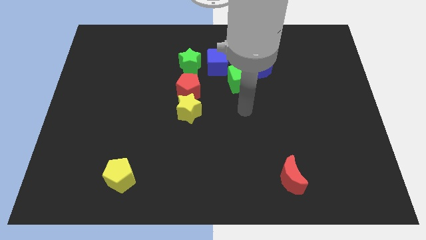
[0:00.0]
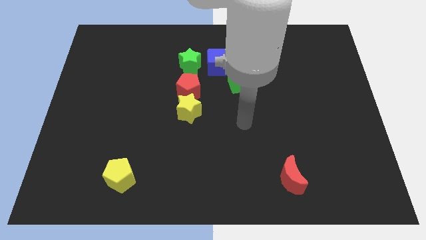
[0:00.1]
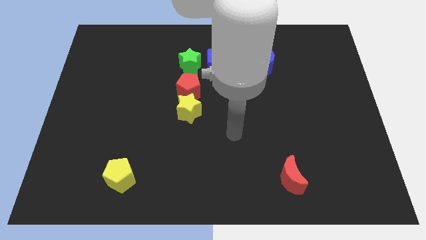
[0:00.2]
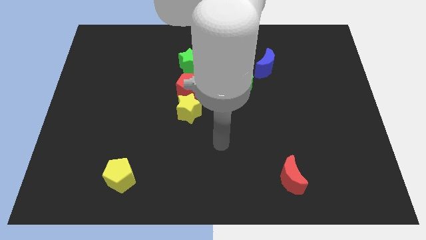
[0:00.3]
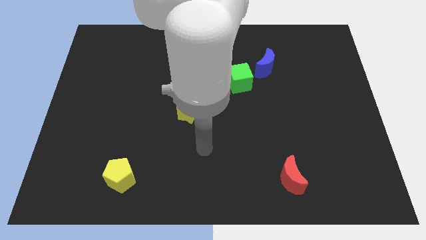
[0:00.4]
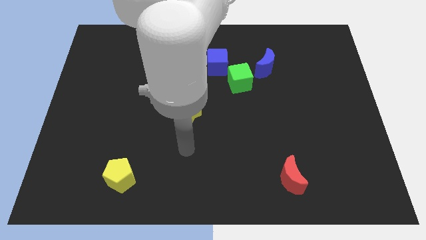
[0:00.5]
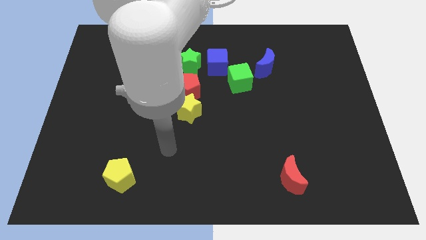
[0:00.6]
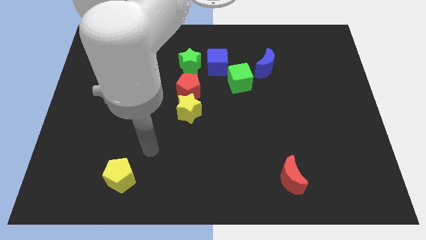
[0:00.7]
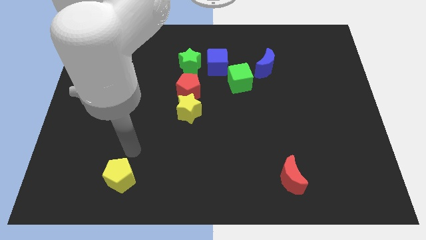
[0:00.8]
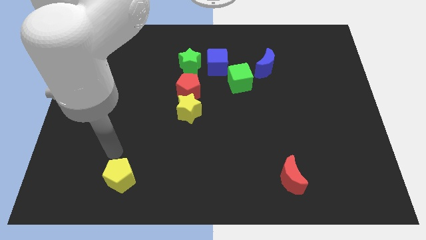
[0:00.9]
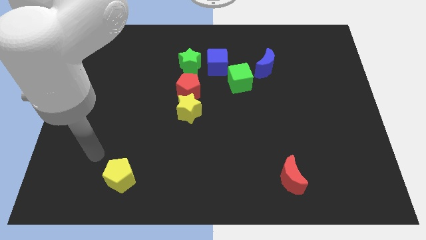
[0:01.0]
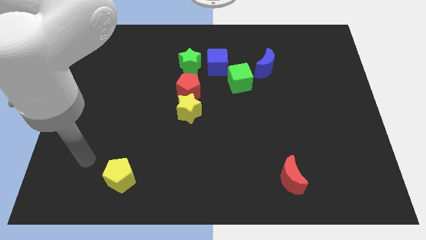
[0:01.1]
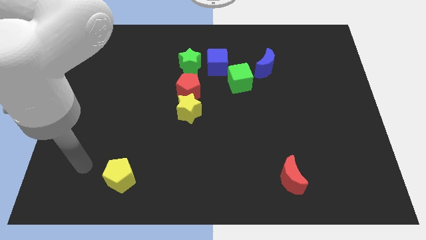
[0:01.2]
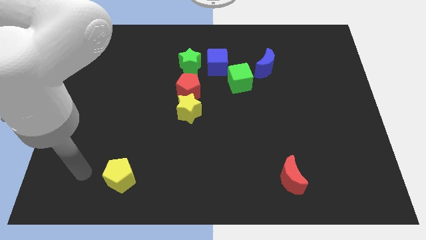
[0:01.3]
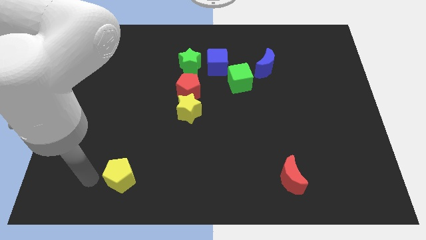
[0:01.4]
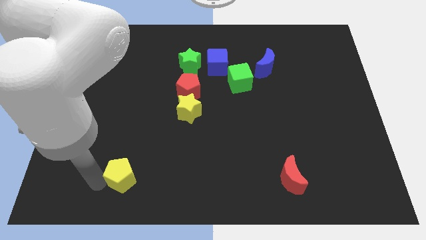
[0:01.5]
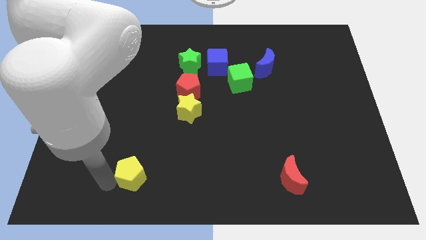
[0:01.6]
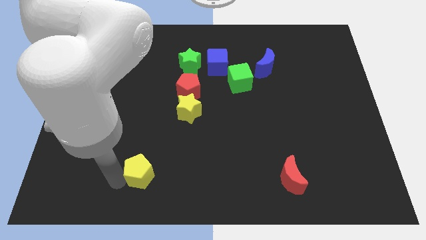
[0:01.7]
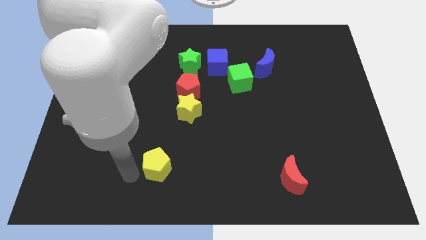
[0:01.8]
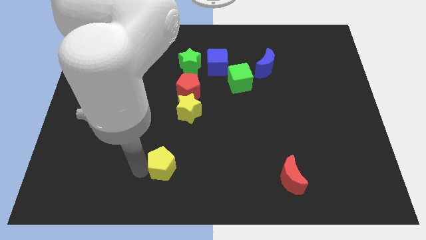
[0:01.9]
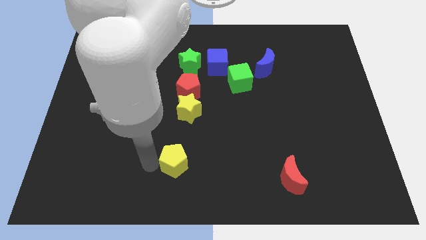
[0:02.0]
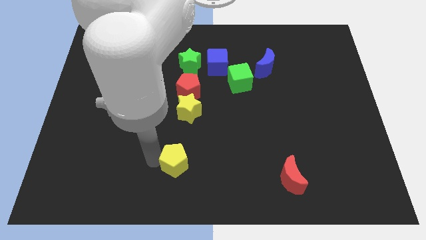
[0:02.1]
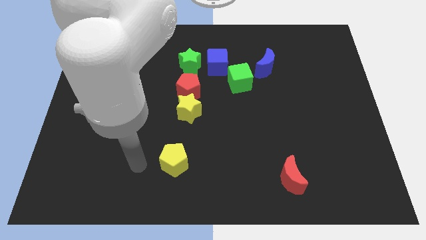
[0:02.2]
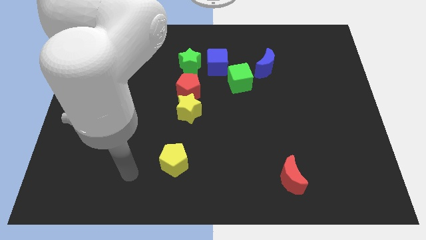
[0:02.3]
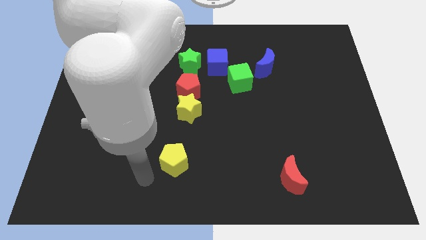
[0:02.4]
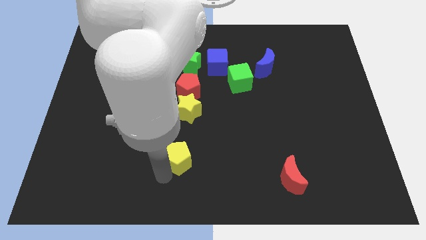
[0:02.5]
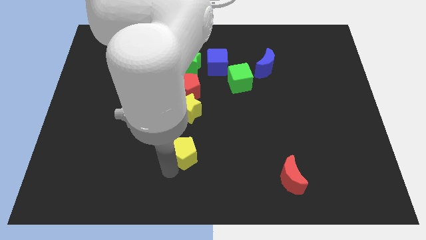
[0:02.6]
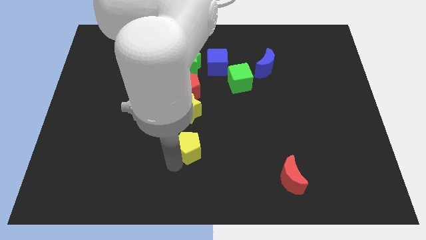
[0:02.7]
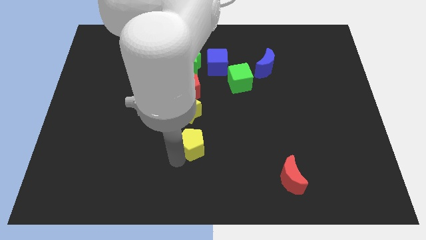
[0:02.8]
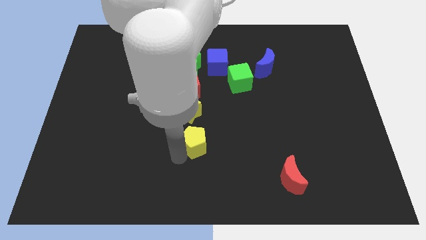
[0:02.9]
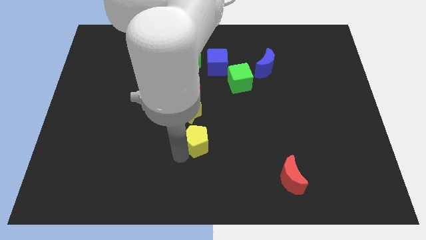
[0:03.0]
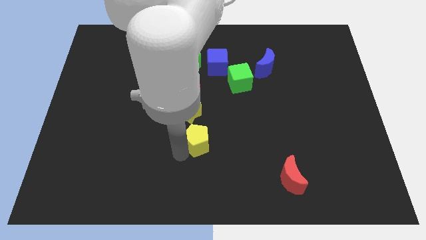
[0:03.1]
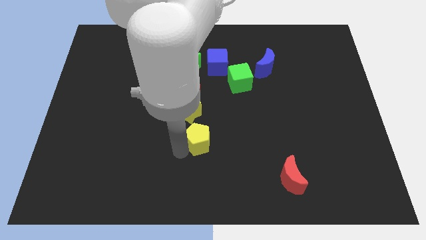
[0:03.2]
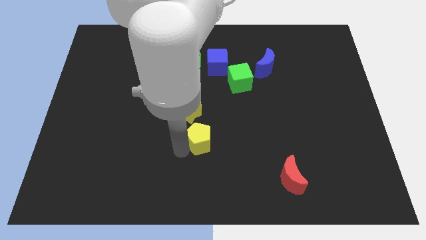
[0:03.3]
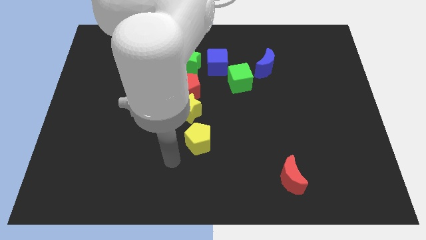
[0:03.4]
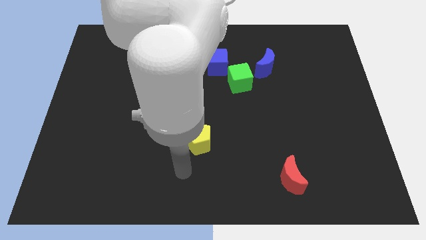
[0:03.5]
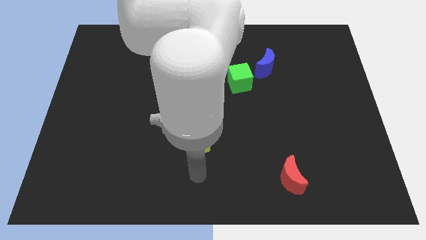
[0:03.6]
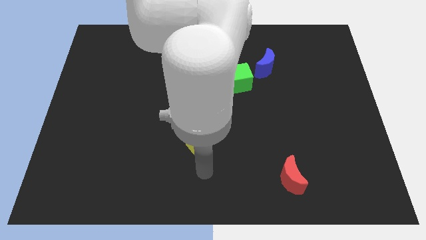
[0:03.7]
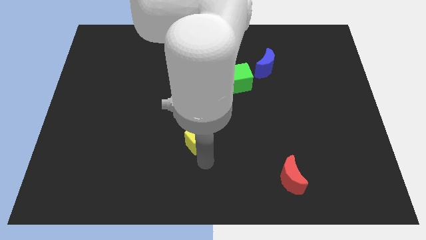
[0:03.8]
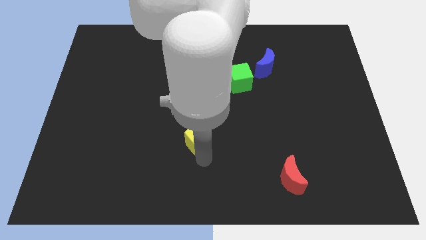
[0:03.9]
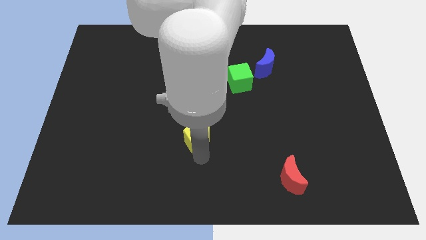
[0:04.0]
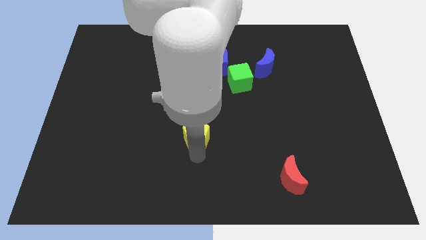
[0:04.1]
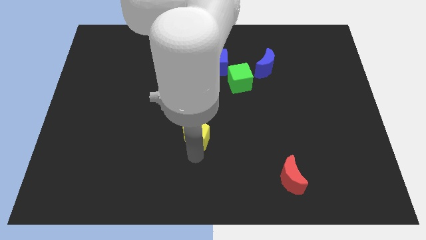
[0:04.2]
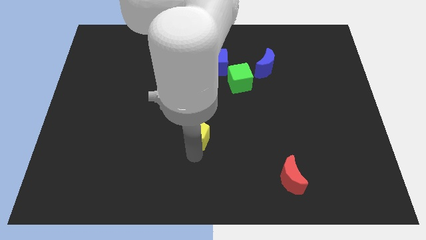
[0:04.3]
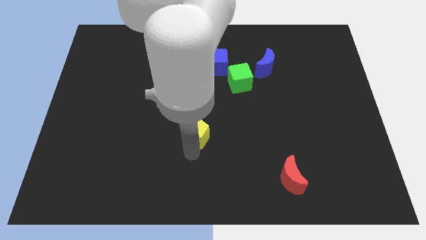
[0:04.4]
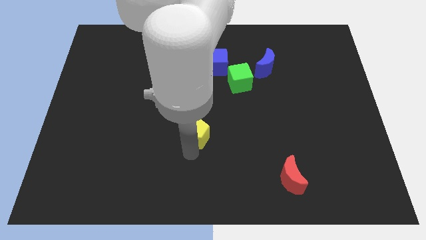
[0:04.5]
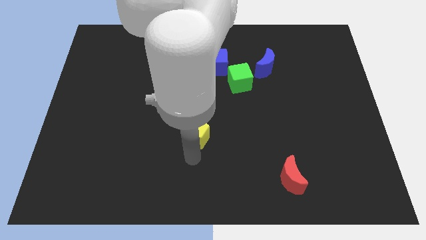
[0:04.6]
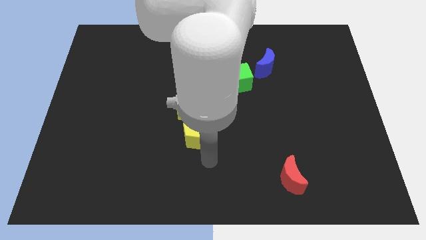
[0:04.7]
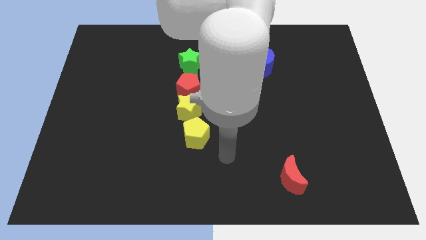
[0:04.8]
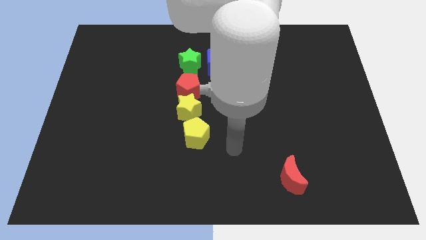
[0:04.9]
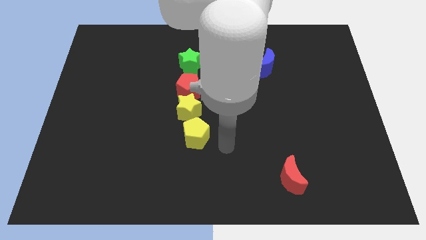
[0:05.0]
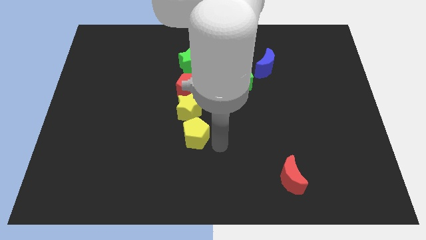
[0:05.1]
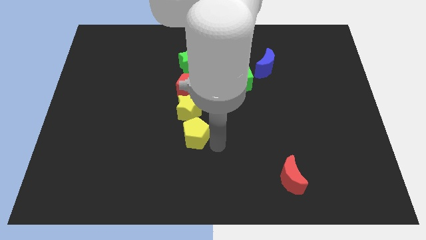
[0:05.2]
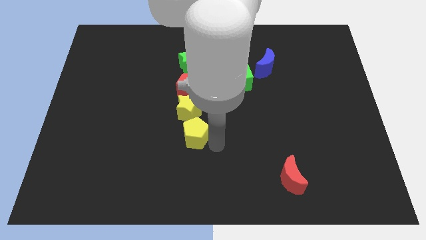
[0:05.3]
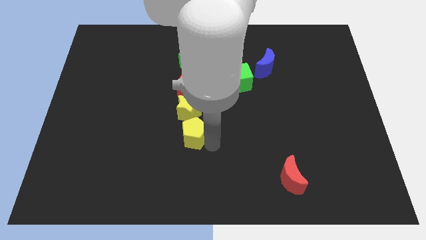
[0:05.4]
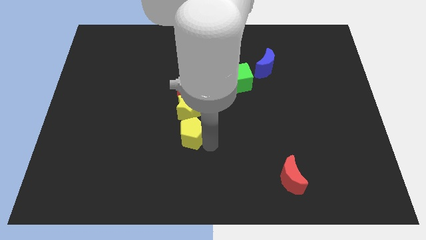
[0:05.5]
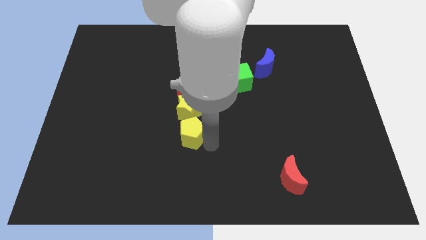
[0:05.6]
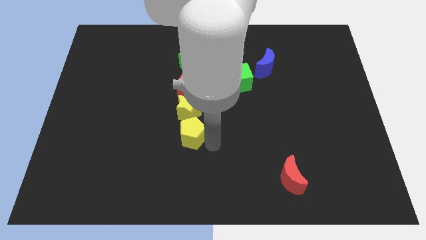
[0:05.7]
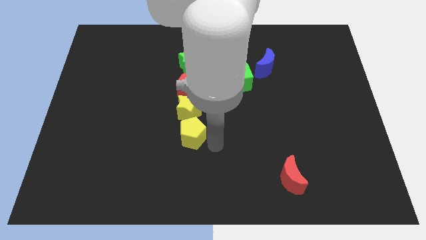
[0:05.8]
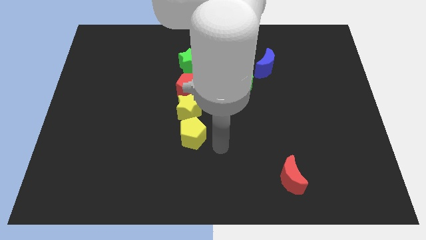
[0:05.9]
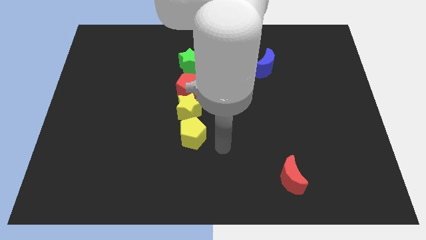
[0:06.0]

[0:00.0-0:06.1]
slide yellow pentagon into yellow star

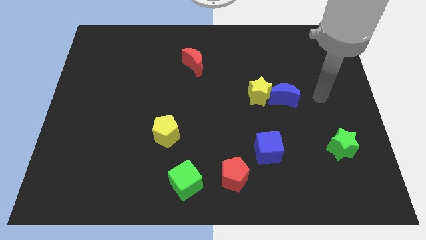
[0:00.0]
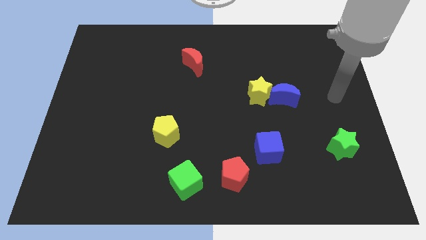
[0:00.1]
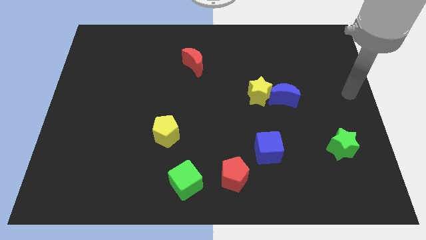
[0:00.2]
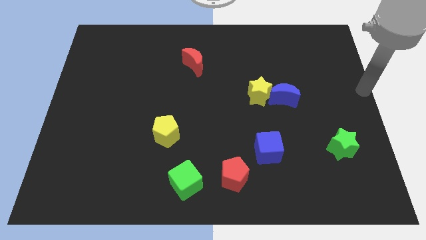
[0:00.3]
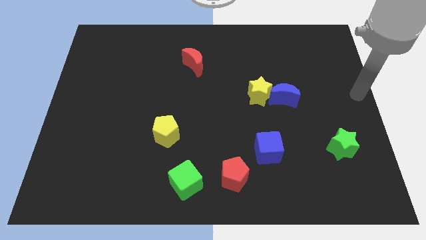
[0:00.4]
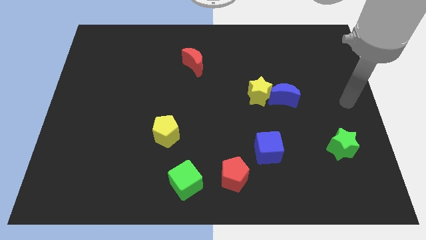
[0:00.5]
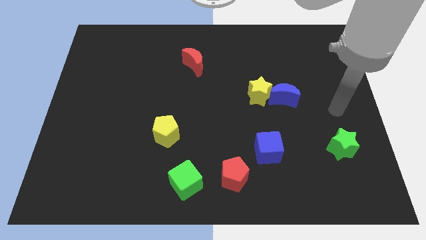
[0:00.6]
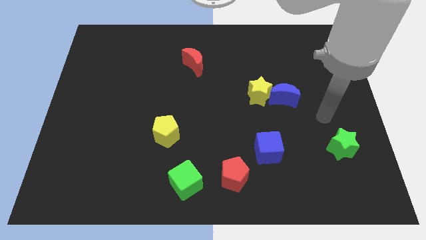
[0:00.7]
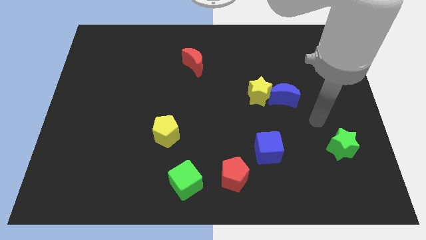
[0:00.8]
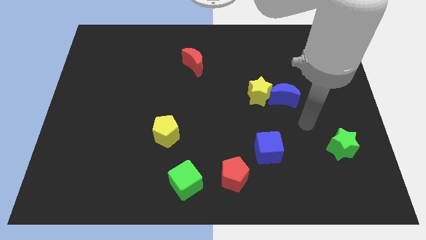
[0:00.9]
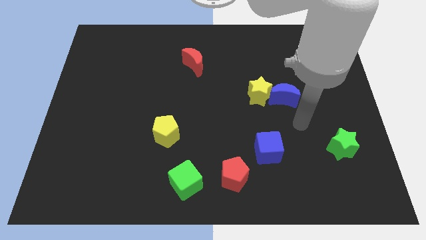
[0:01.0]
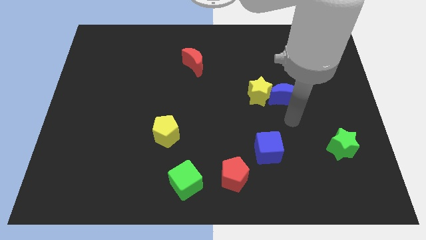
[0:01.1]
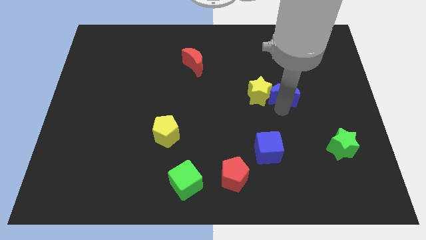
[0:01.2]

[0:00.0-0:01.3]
point your arm at the bottom of the blue crescent

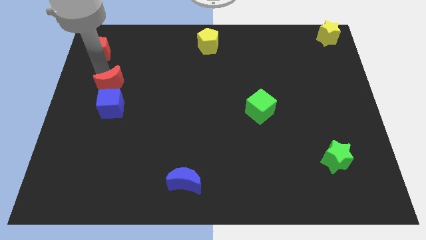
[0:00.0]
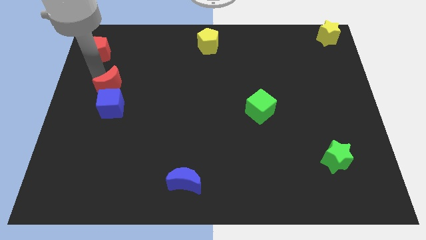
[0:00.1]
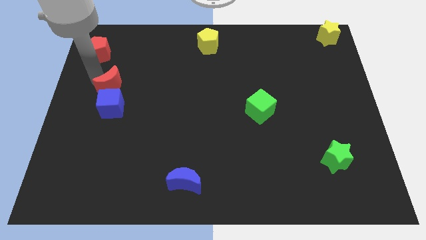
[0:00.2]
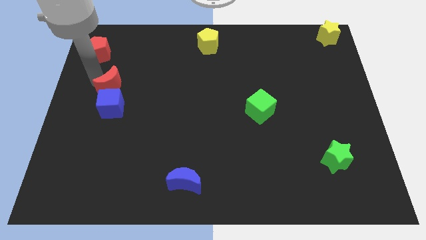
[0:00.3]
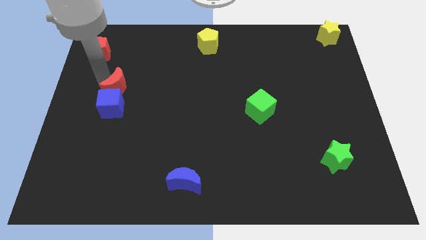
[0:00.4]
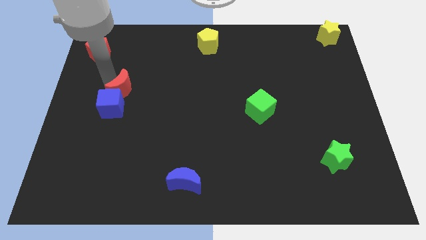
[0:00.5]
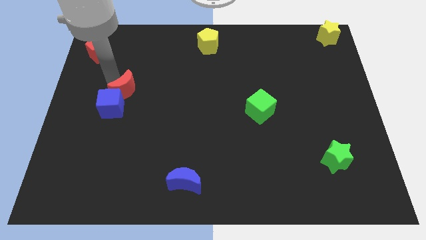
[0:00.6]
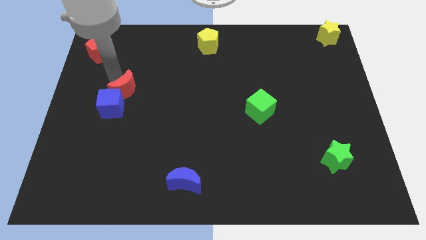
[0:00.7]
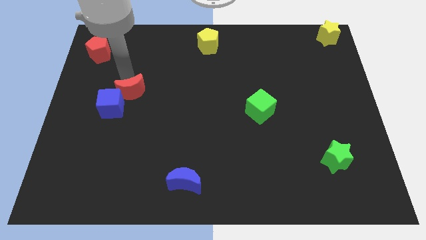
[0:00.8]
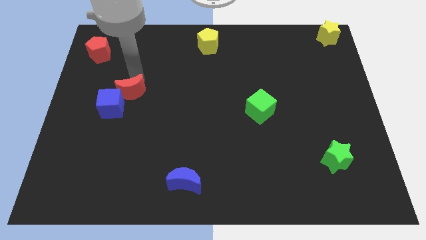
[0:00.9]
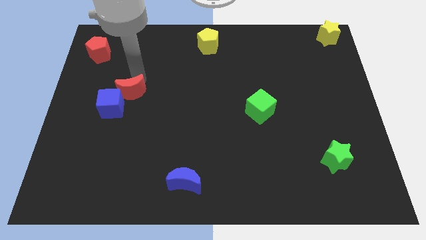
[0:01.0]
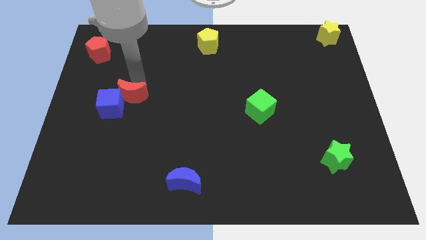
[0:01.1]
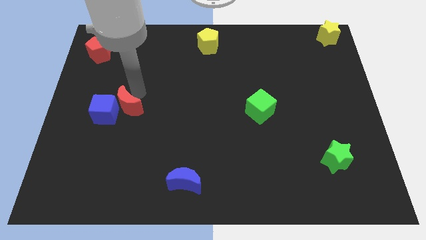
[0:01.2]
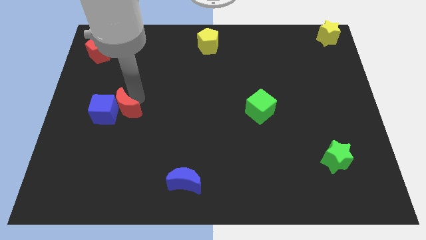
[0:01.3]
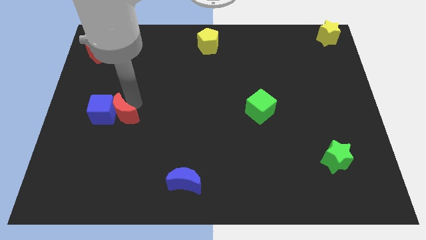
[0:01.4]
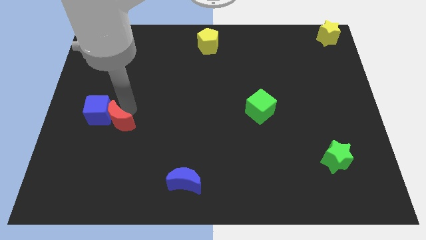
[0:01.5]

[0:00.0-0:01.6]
place red moon right to blue cube
